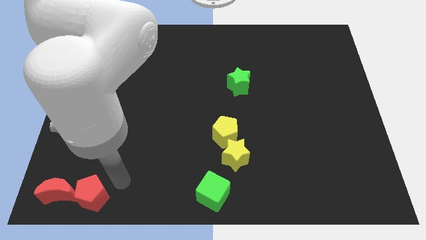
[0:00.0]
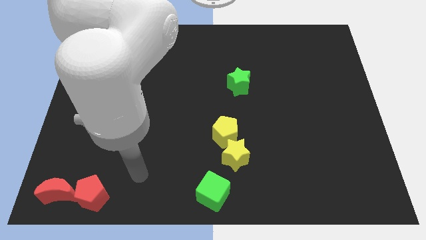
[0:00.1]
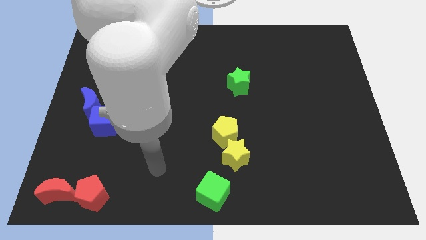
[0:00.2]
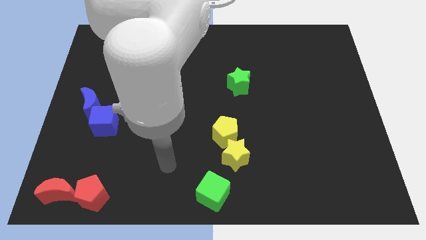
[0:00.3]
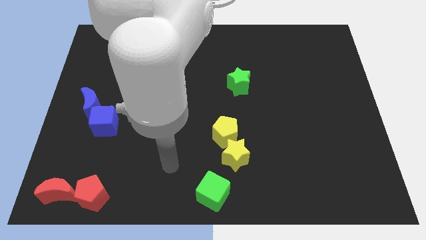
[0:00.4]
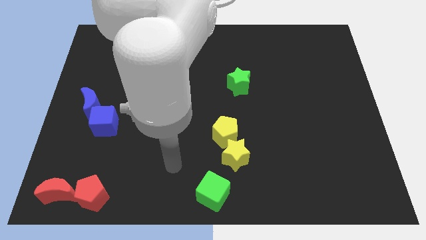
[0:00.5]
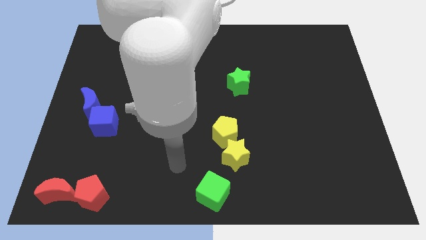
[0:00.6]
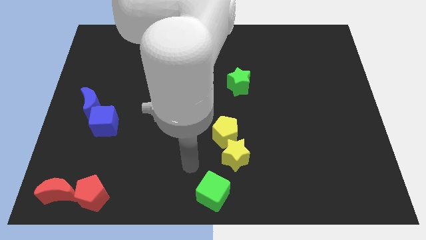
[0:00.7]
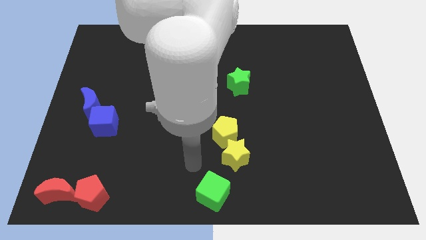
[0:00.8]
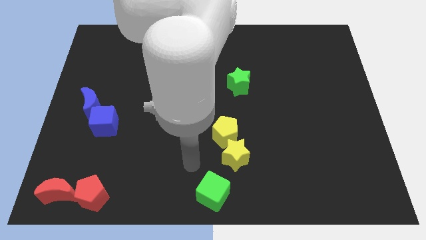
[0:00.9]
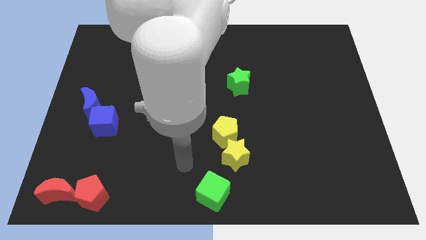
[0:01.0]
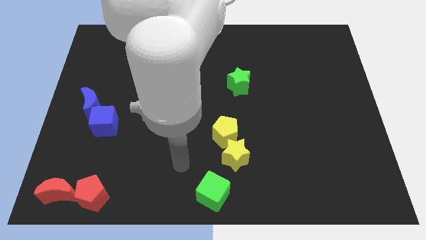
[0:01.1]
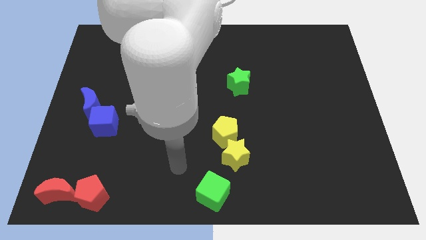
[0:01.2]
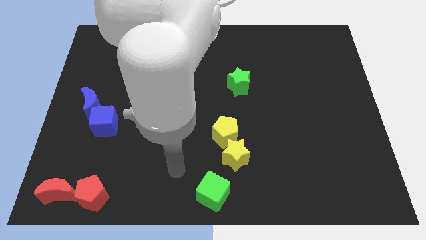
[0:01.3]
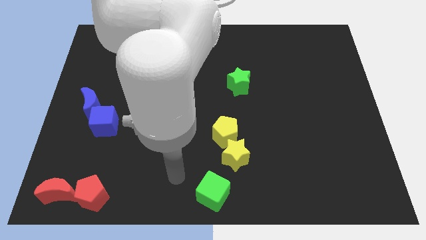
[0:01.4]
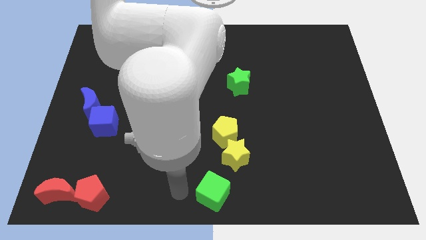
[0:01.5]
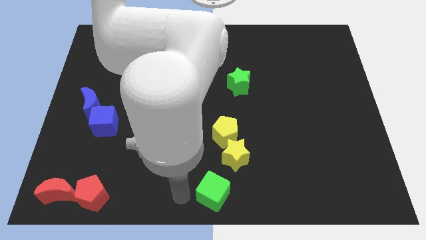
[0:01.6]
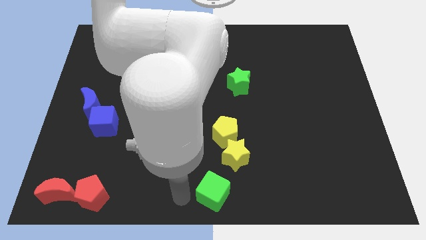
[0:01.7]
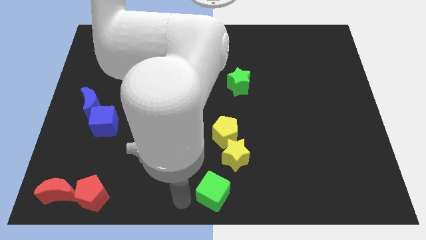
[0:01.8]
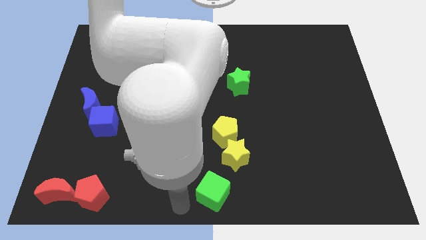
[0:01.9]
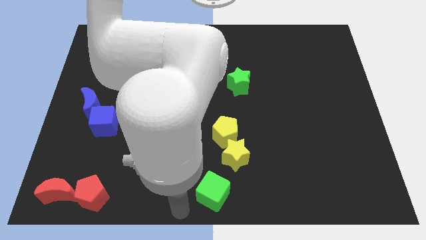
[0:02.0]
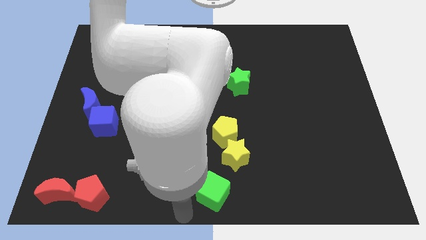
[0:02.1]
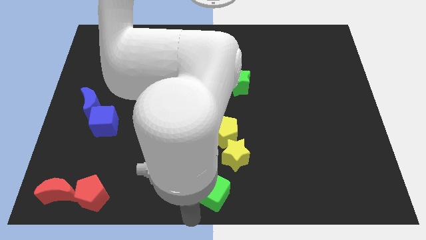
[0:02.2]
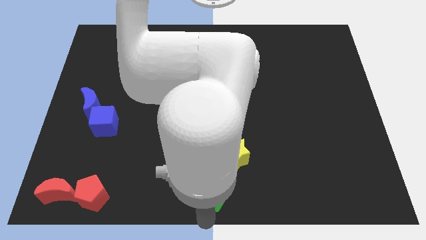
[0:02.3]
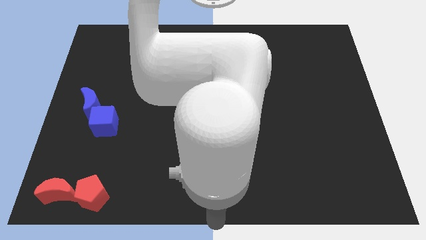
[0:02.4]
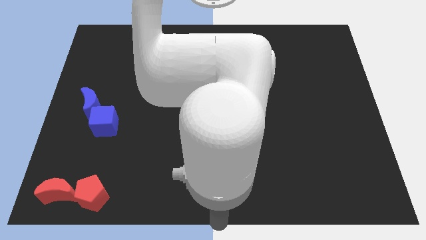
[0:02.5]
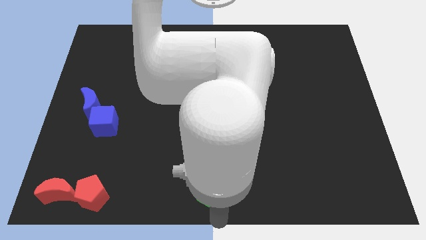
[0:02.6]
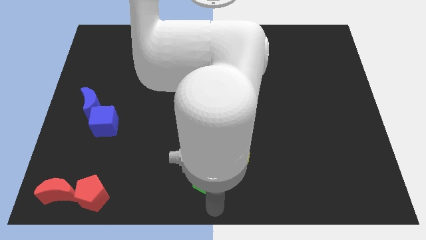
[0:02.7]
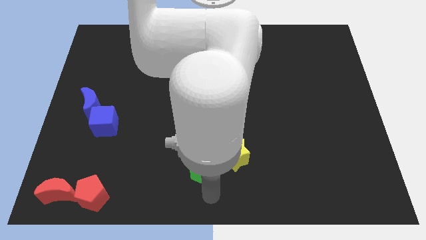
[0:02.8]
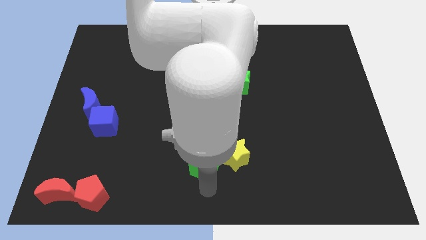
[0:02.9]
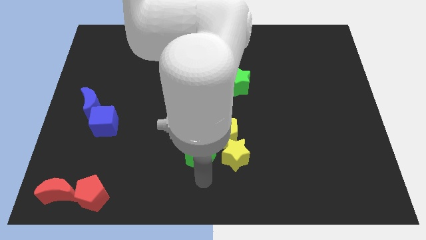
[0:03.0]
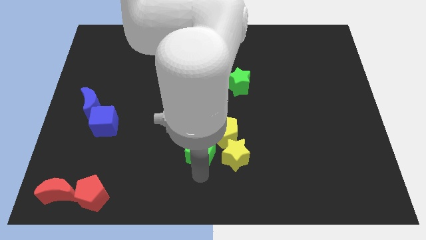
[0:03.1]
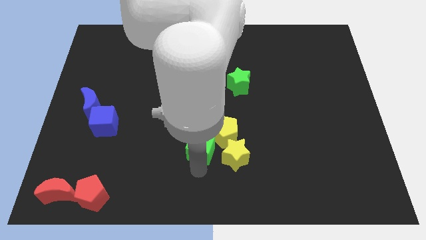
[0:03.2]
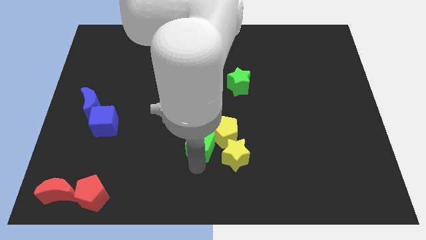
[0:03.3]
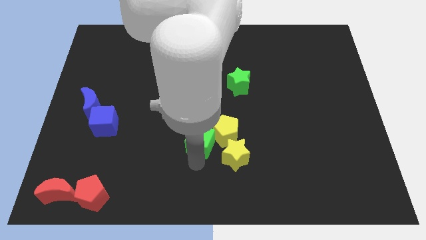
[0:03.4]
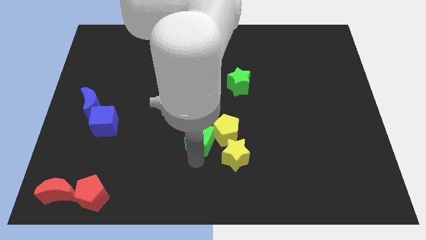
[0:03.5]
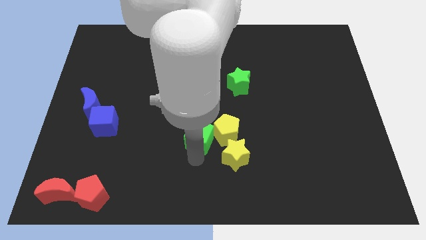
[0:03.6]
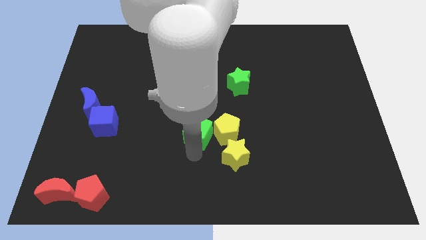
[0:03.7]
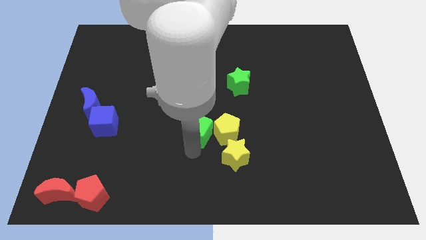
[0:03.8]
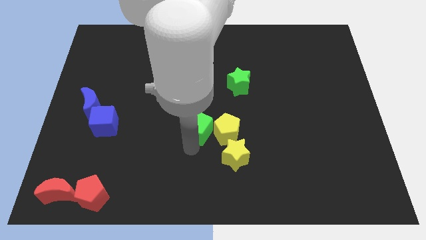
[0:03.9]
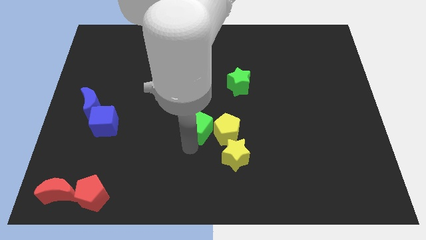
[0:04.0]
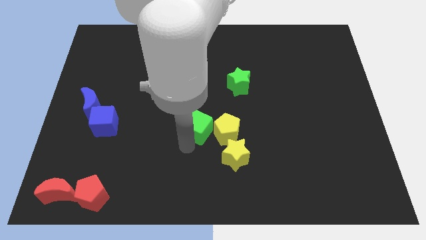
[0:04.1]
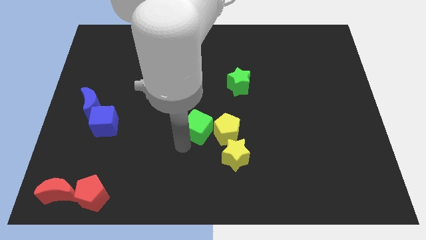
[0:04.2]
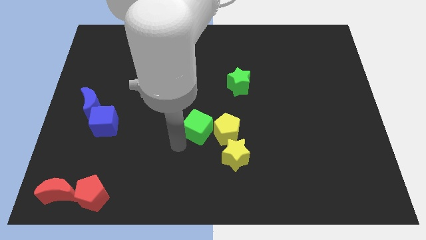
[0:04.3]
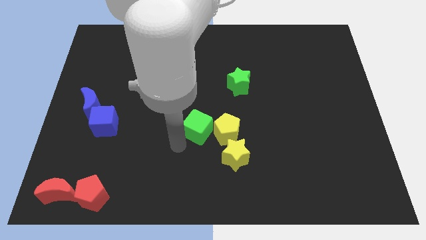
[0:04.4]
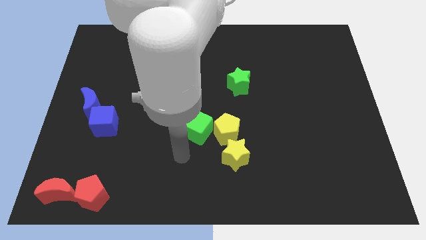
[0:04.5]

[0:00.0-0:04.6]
slide the green cube close to the left side of the yellow pentagon

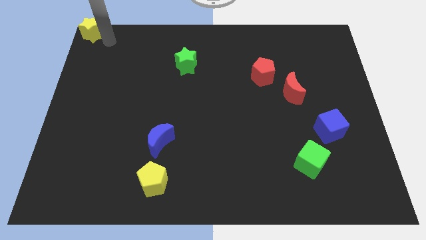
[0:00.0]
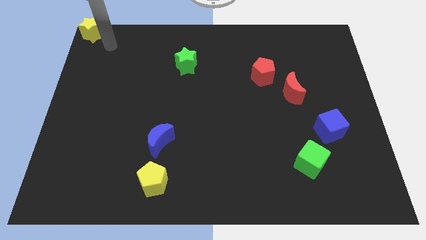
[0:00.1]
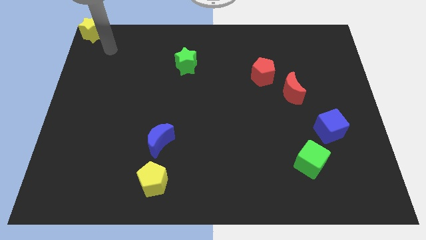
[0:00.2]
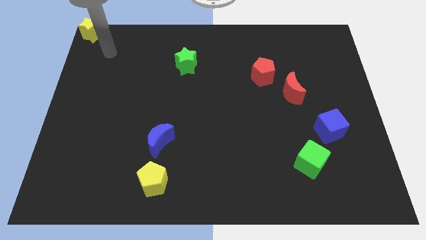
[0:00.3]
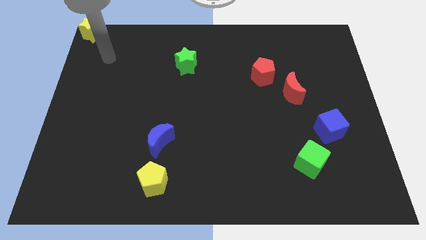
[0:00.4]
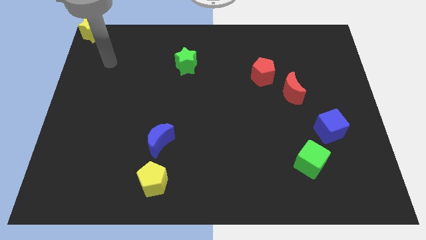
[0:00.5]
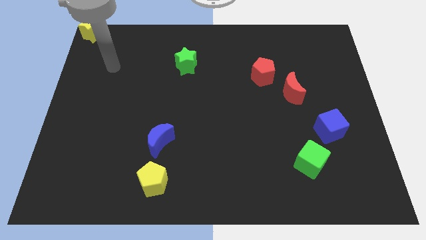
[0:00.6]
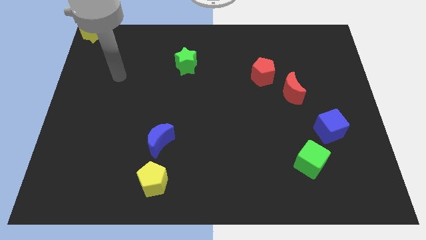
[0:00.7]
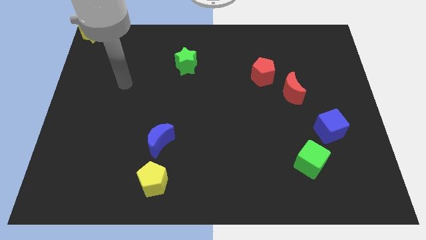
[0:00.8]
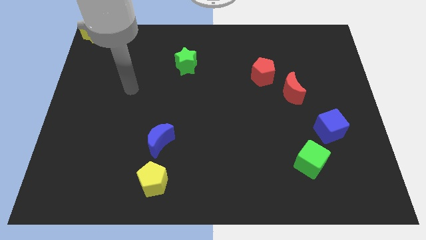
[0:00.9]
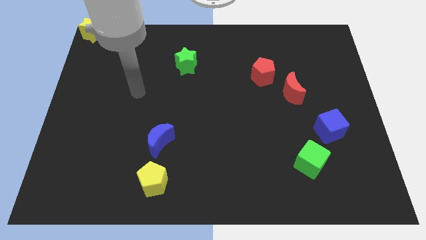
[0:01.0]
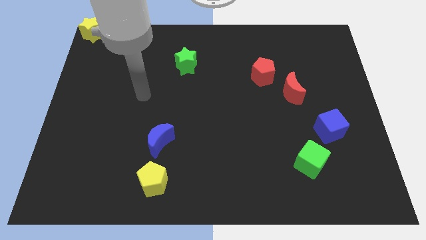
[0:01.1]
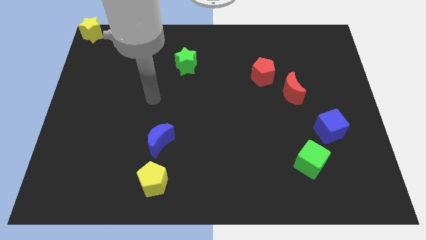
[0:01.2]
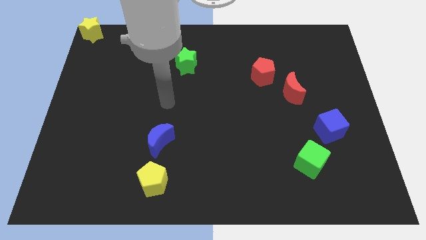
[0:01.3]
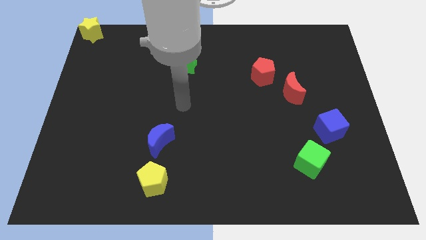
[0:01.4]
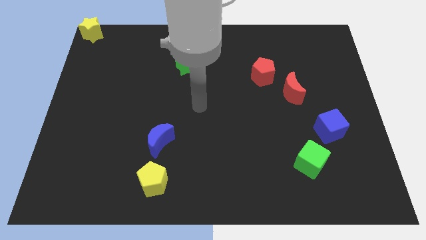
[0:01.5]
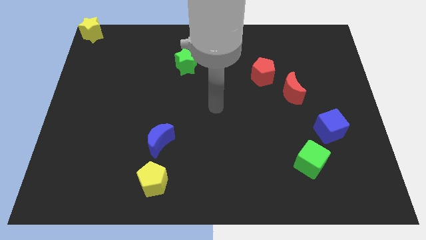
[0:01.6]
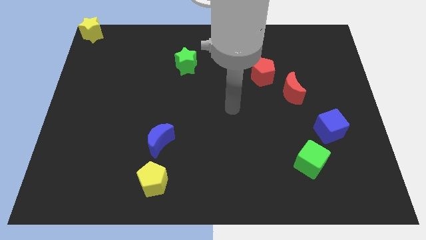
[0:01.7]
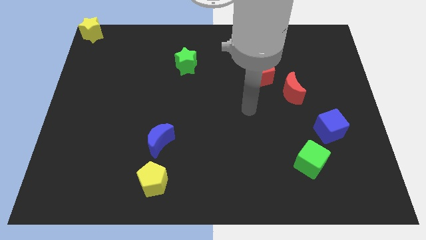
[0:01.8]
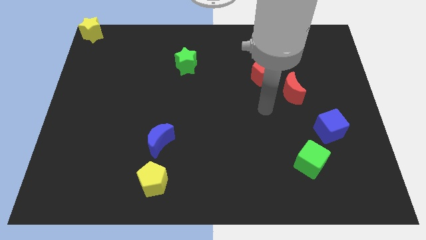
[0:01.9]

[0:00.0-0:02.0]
place your hand to left side of the crescent

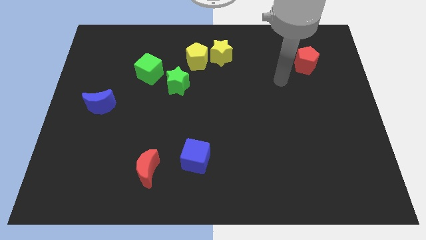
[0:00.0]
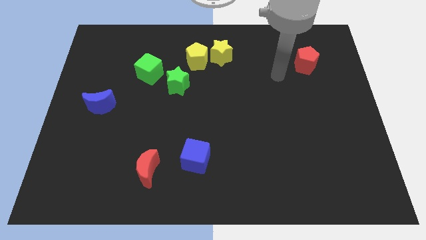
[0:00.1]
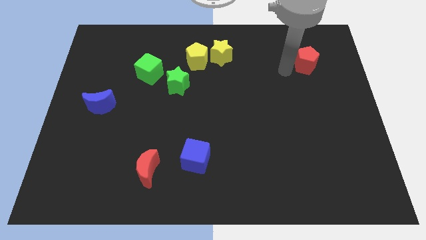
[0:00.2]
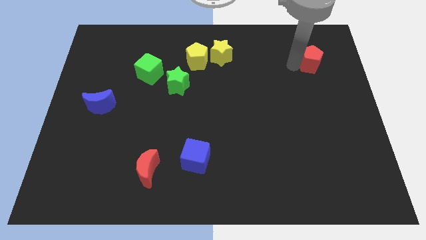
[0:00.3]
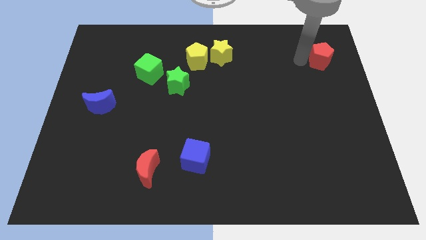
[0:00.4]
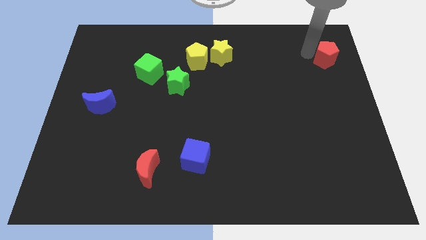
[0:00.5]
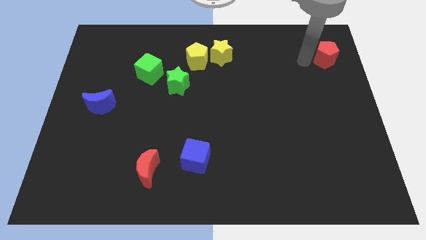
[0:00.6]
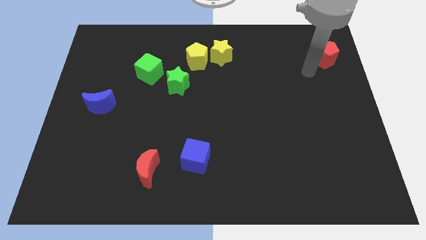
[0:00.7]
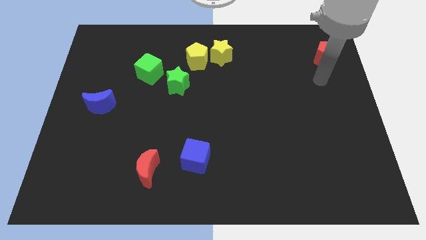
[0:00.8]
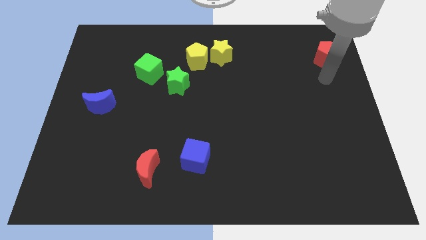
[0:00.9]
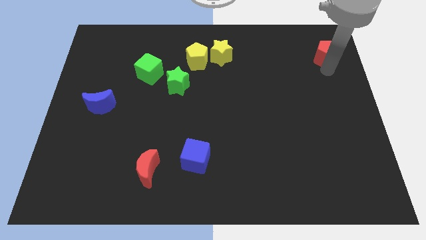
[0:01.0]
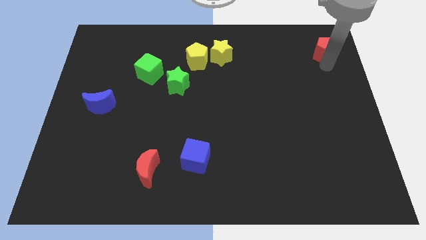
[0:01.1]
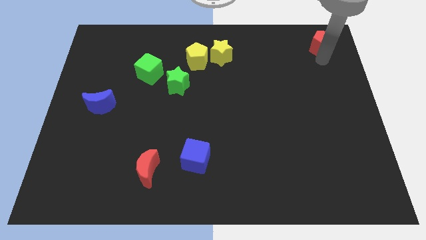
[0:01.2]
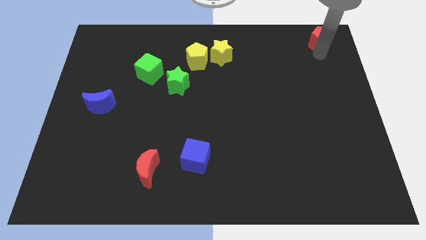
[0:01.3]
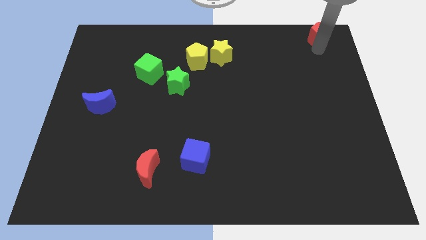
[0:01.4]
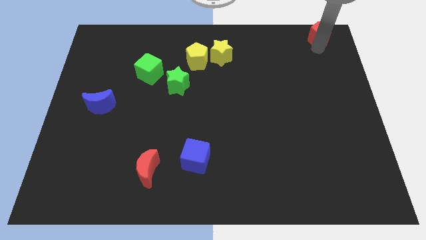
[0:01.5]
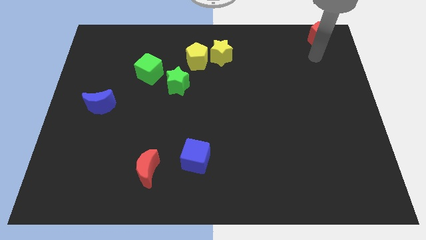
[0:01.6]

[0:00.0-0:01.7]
place the red pentagon at top right corner of the board

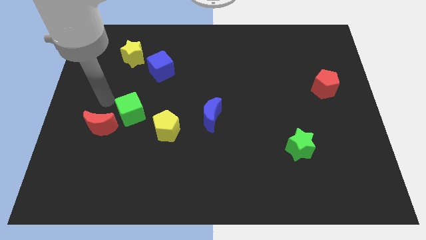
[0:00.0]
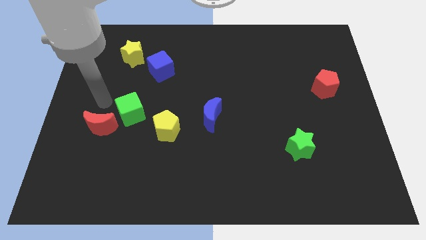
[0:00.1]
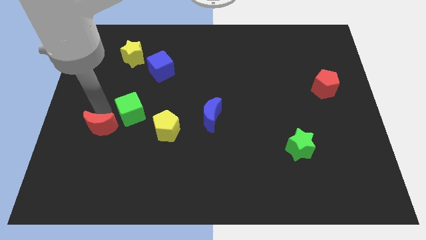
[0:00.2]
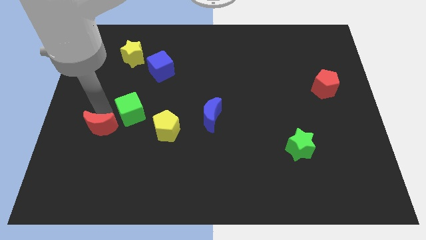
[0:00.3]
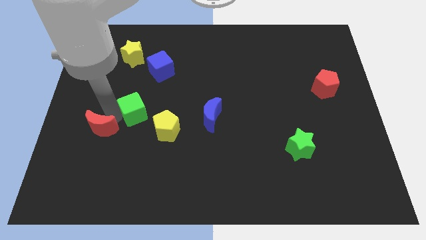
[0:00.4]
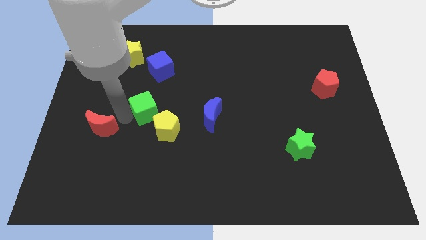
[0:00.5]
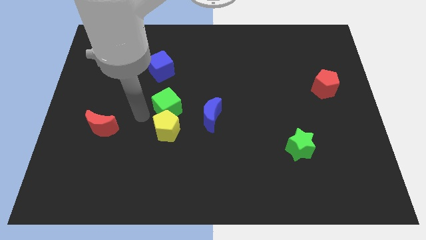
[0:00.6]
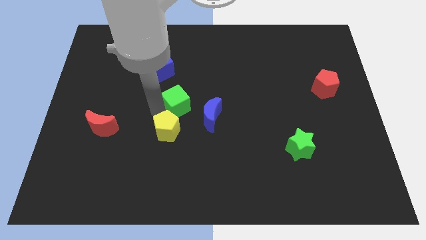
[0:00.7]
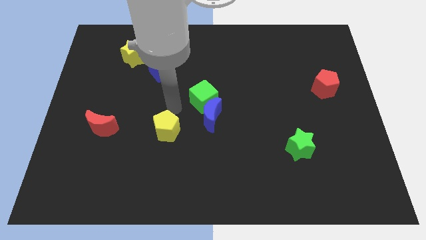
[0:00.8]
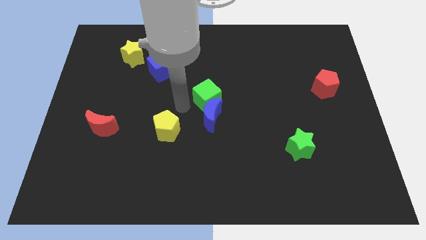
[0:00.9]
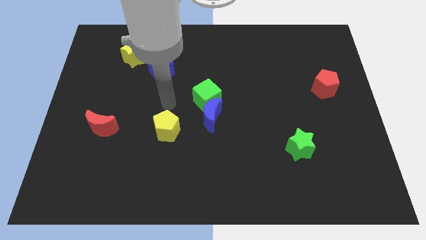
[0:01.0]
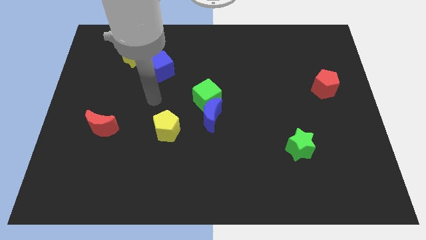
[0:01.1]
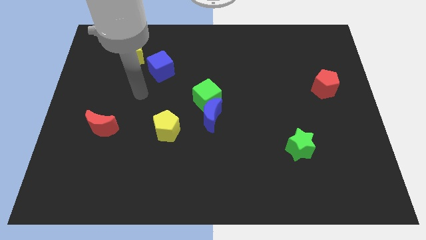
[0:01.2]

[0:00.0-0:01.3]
move the green cube above the blue crescent
